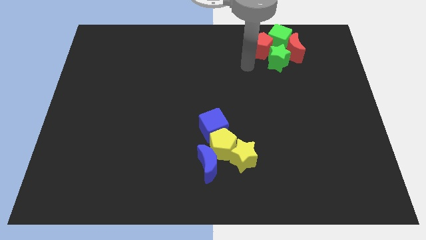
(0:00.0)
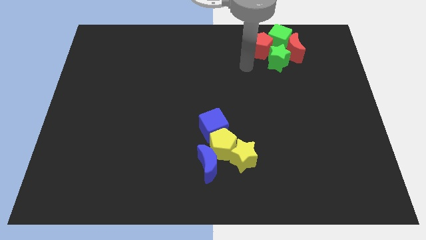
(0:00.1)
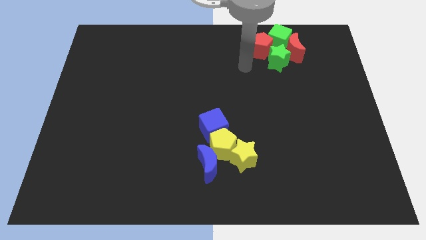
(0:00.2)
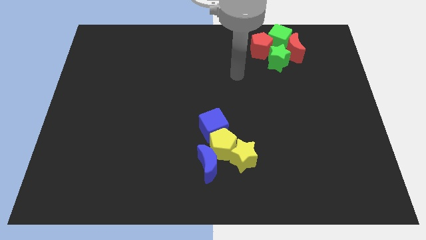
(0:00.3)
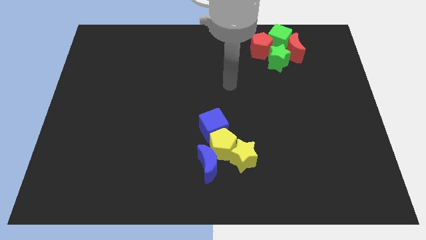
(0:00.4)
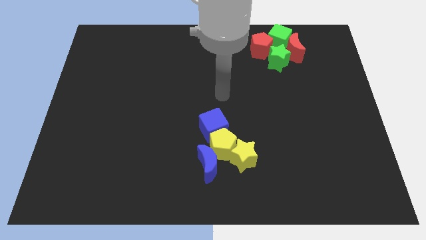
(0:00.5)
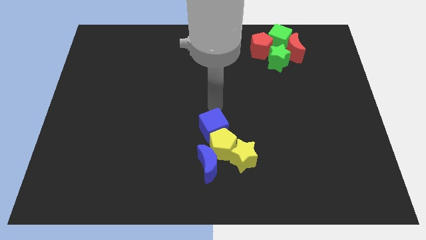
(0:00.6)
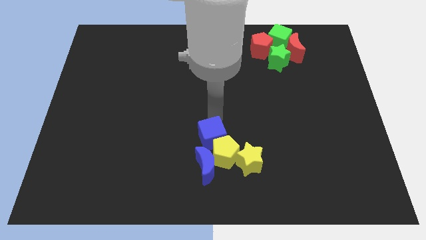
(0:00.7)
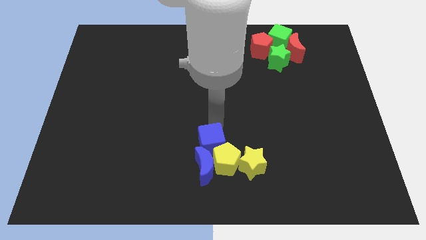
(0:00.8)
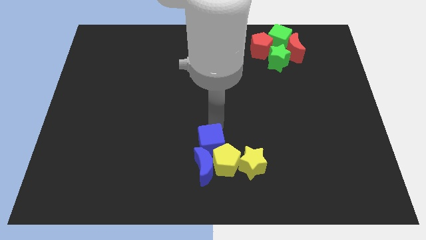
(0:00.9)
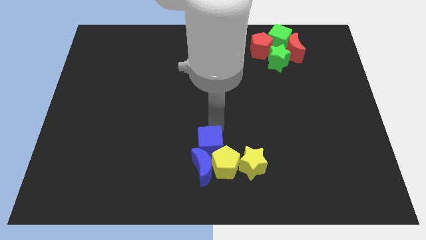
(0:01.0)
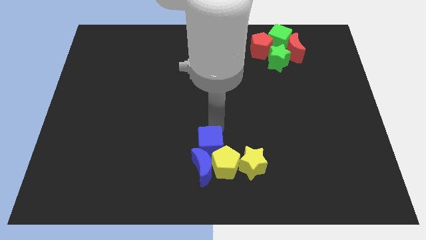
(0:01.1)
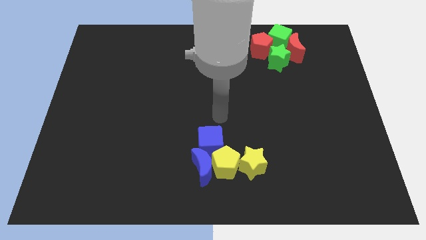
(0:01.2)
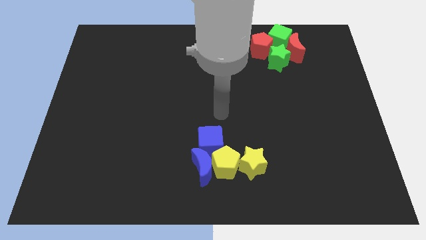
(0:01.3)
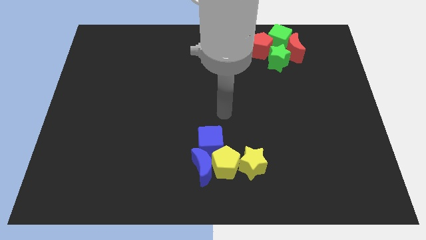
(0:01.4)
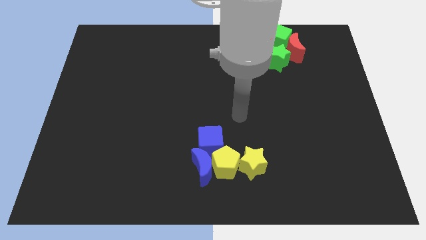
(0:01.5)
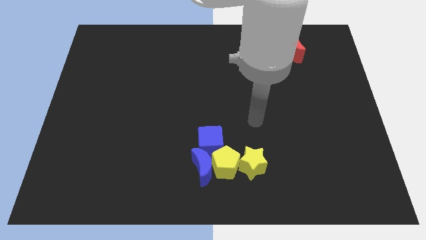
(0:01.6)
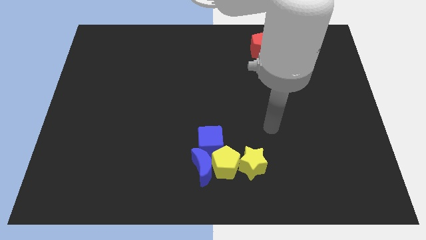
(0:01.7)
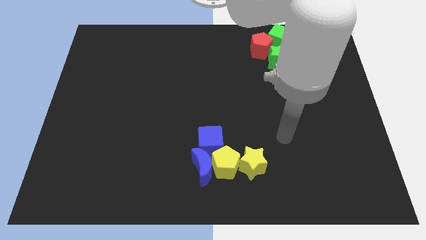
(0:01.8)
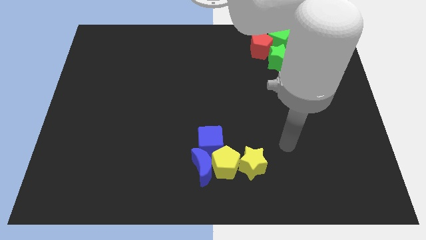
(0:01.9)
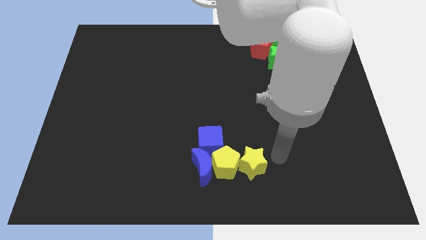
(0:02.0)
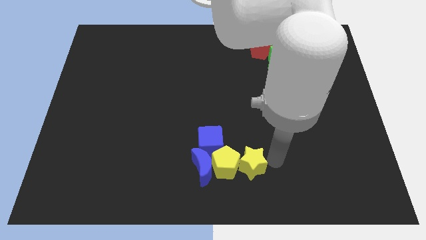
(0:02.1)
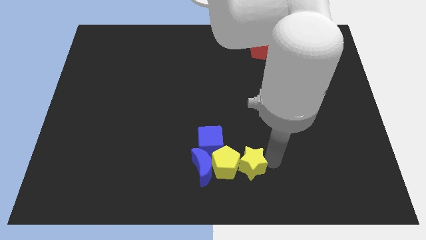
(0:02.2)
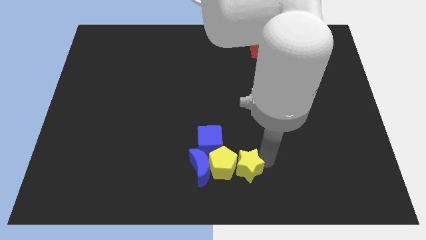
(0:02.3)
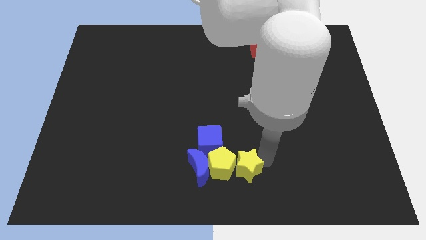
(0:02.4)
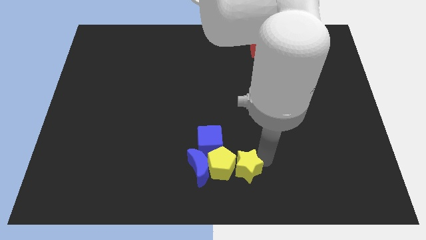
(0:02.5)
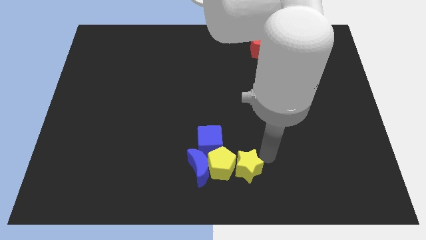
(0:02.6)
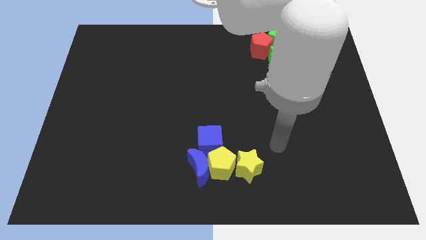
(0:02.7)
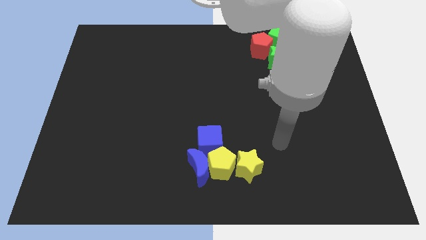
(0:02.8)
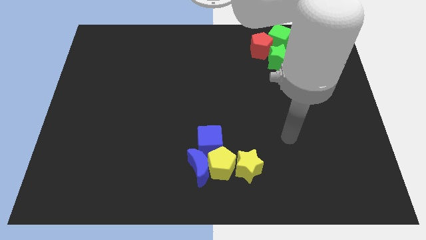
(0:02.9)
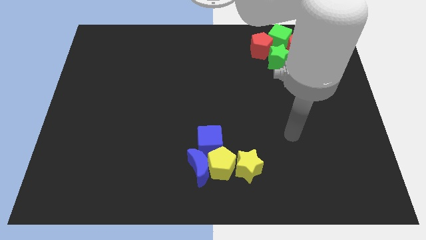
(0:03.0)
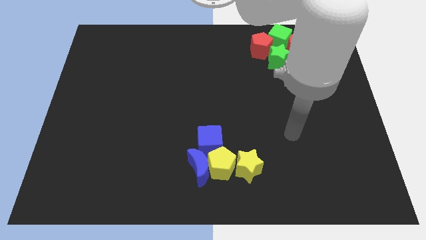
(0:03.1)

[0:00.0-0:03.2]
adjust the blue cube and the yellow star at the bottom of the board

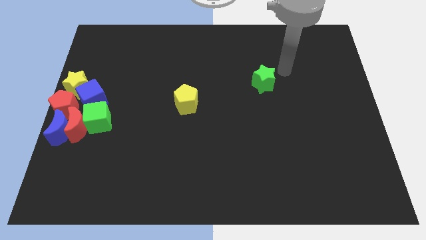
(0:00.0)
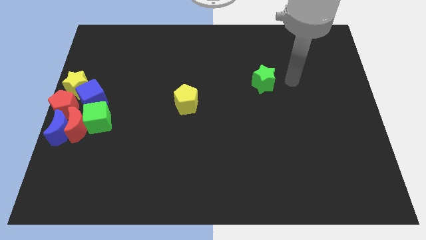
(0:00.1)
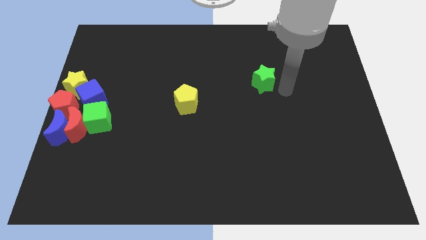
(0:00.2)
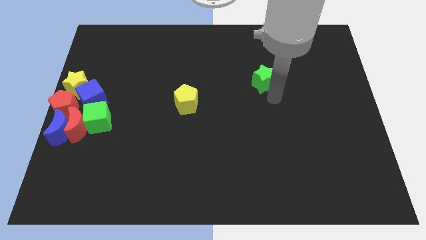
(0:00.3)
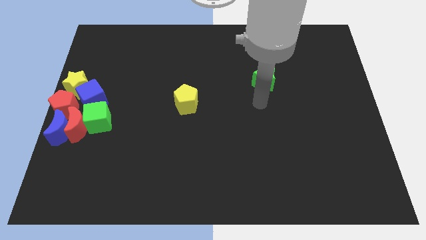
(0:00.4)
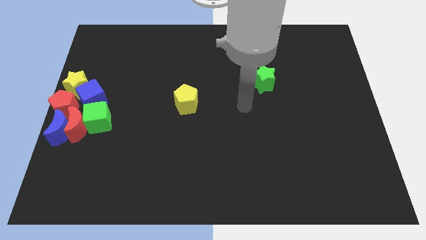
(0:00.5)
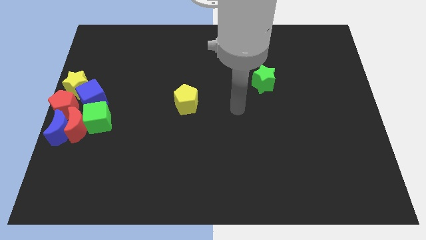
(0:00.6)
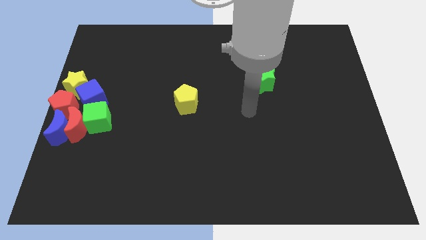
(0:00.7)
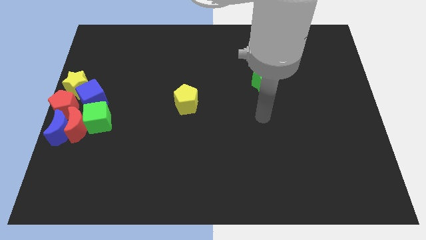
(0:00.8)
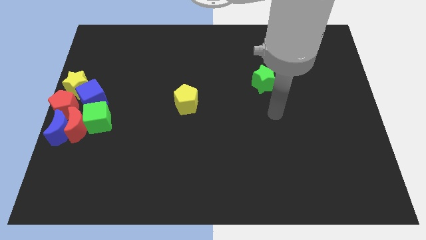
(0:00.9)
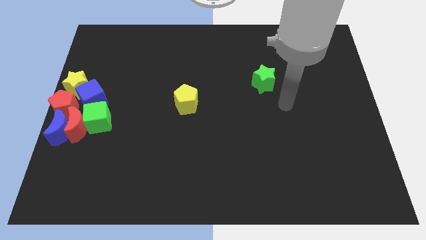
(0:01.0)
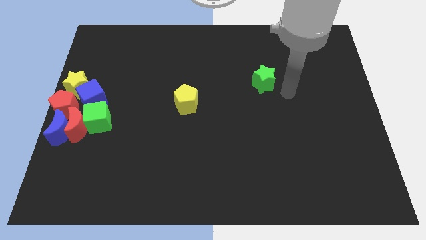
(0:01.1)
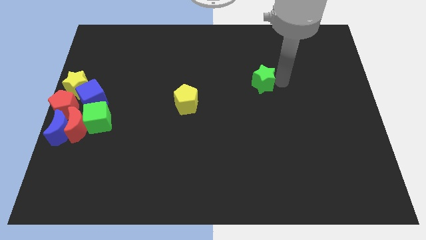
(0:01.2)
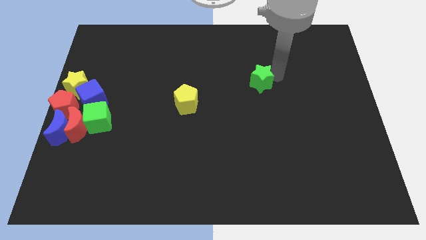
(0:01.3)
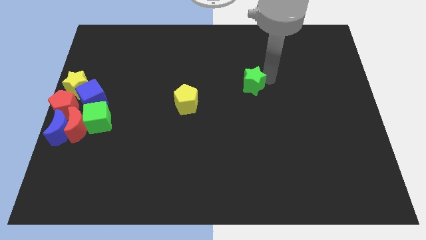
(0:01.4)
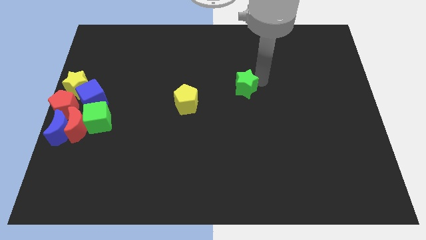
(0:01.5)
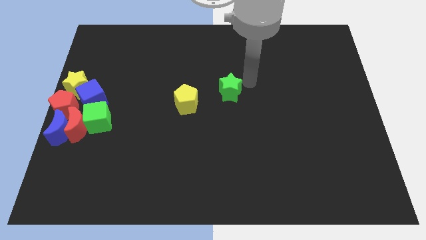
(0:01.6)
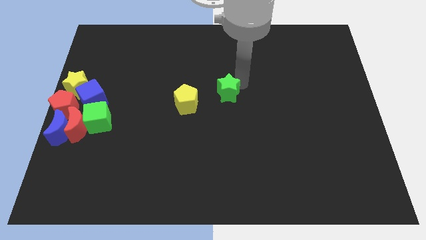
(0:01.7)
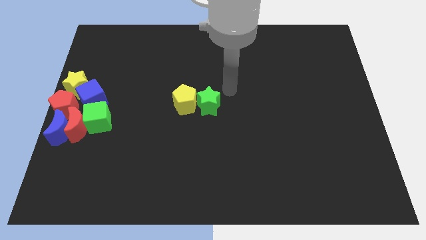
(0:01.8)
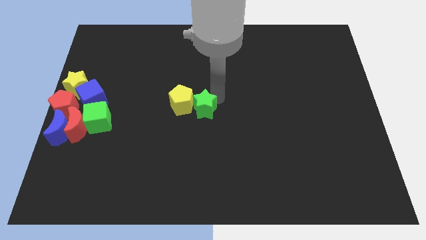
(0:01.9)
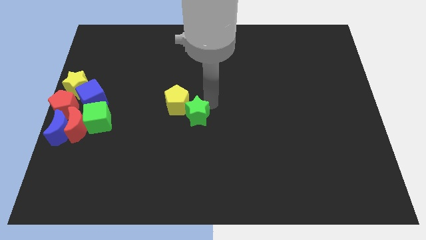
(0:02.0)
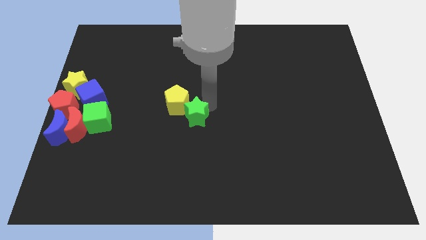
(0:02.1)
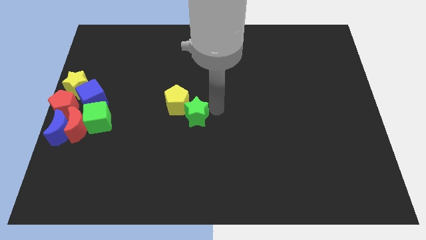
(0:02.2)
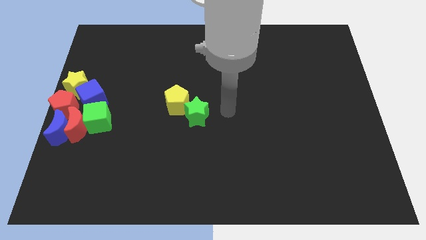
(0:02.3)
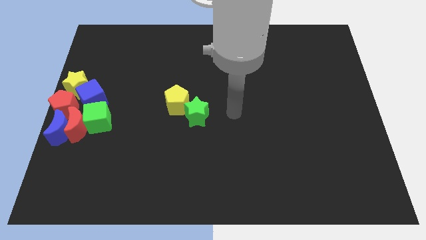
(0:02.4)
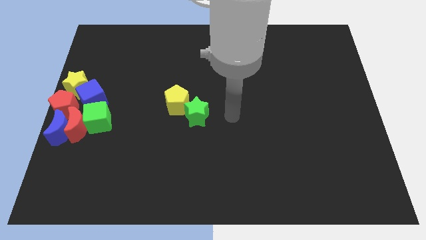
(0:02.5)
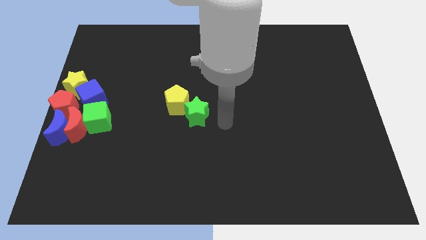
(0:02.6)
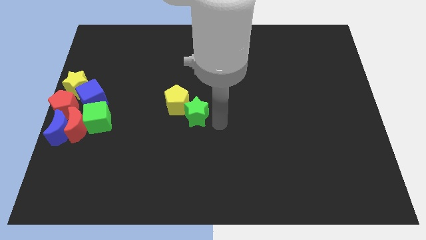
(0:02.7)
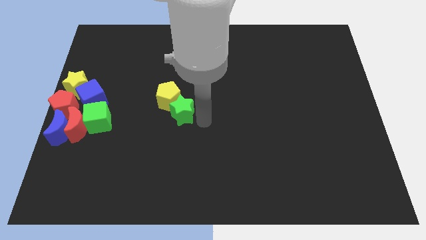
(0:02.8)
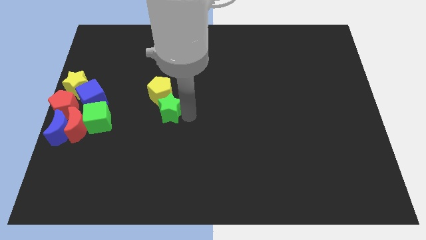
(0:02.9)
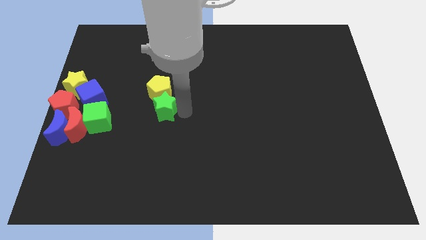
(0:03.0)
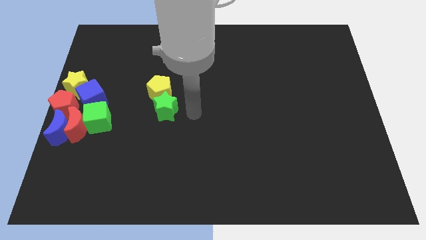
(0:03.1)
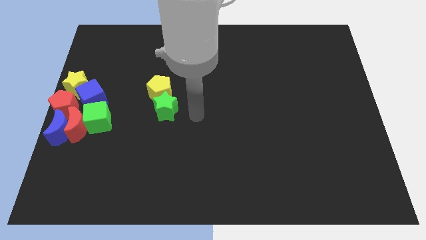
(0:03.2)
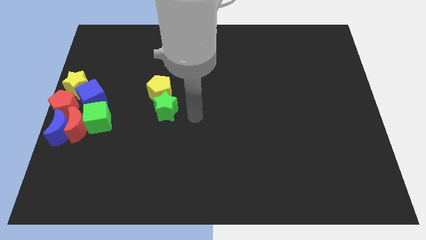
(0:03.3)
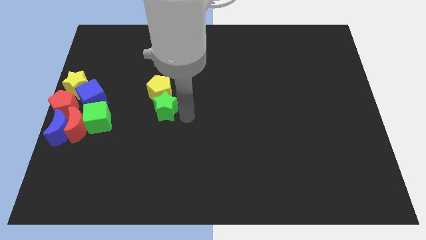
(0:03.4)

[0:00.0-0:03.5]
move the green star towards the yellow pentagon

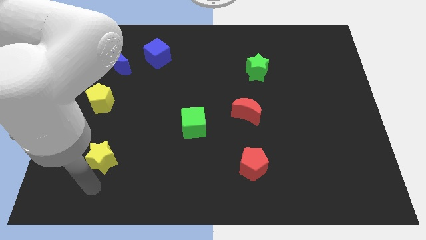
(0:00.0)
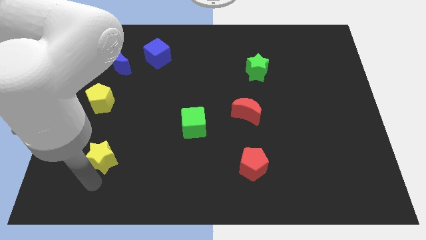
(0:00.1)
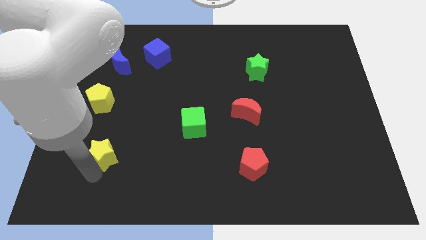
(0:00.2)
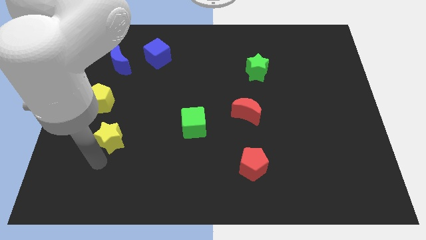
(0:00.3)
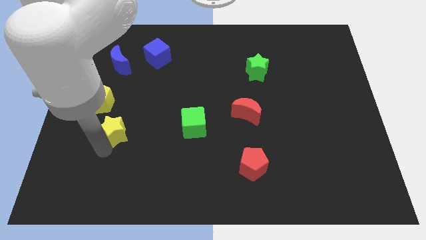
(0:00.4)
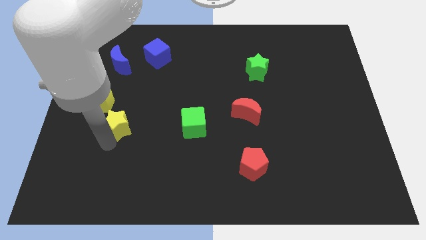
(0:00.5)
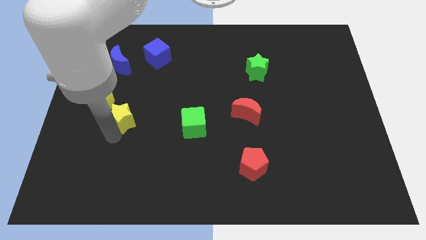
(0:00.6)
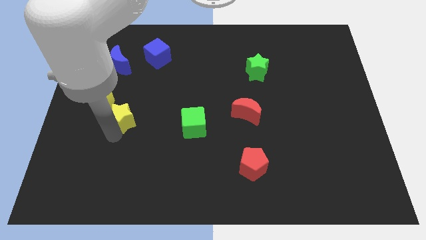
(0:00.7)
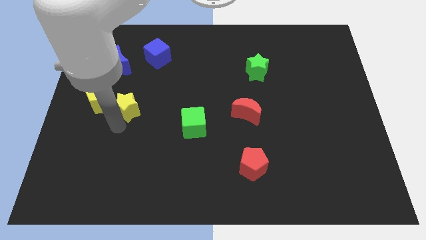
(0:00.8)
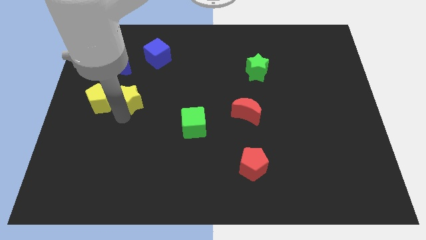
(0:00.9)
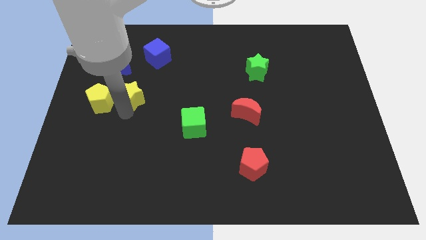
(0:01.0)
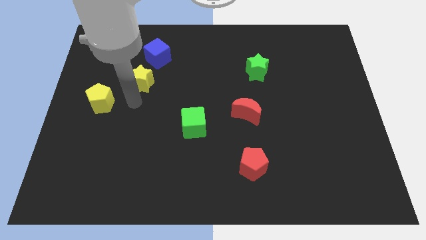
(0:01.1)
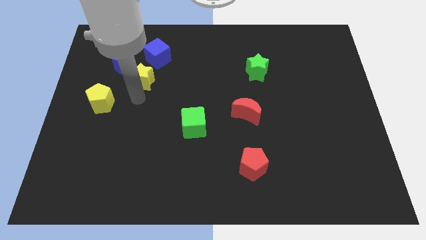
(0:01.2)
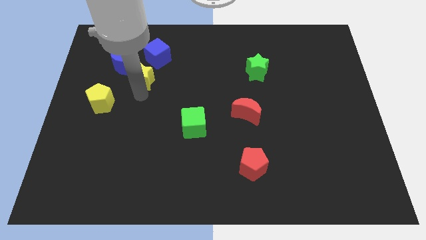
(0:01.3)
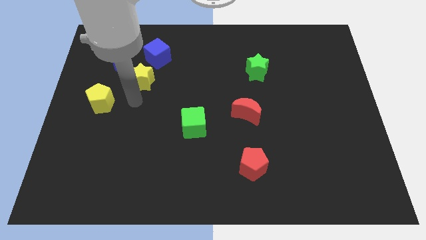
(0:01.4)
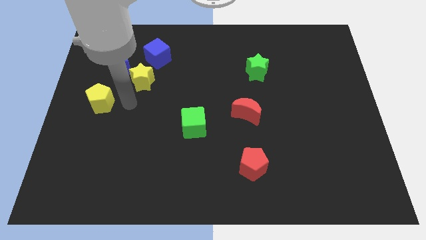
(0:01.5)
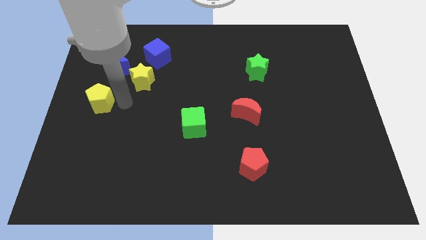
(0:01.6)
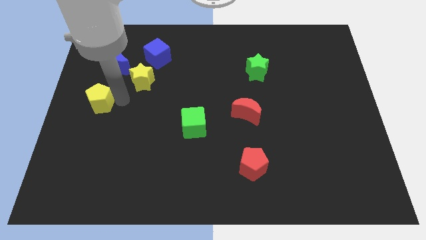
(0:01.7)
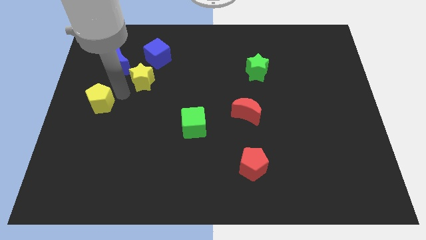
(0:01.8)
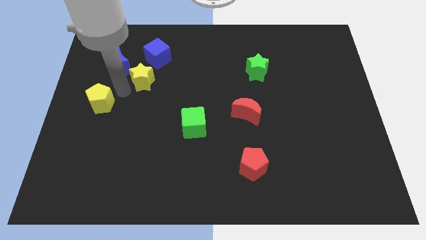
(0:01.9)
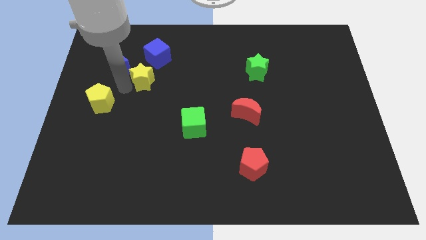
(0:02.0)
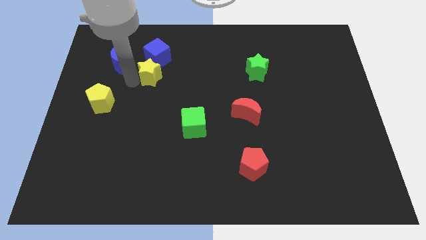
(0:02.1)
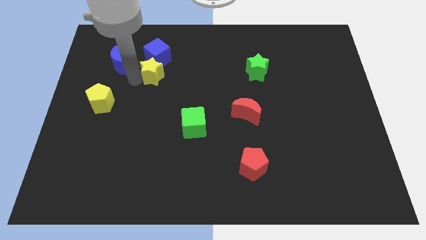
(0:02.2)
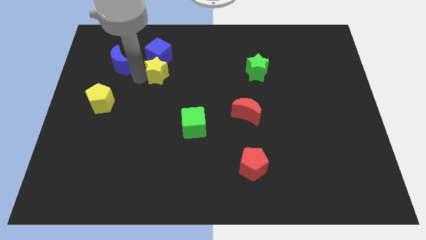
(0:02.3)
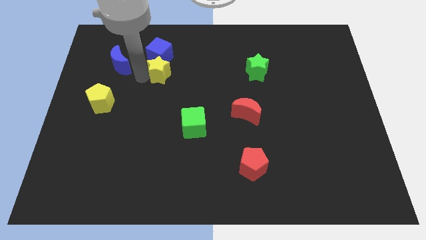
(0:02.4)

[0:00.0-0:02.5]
push the yellow star to the bottom of the blue cube
